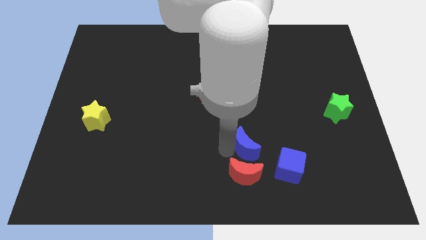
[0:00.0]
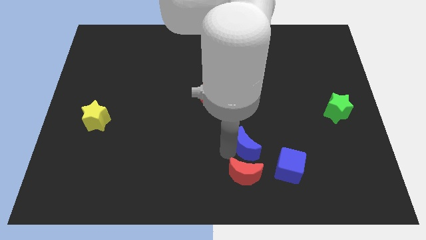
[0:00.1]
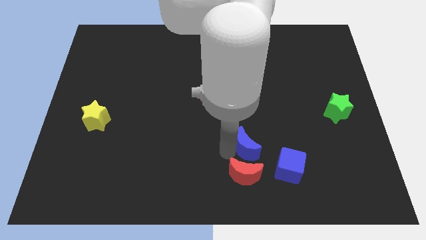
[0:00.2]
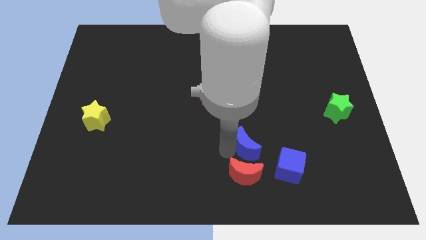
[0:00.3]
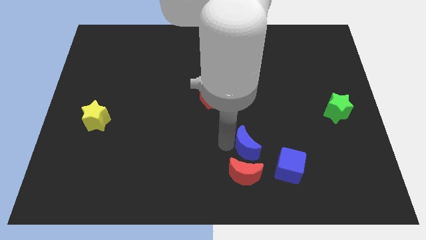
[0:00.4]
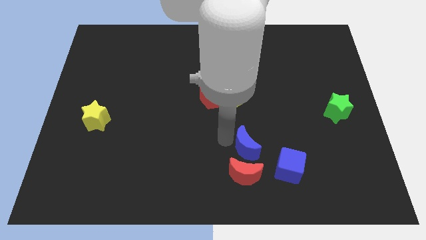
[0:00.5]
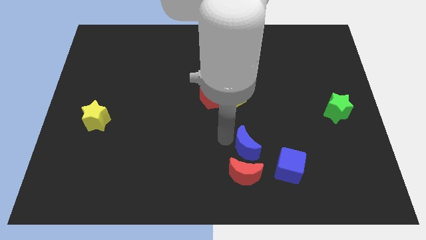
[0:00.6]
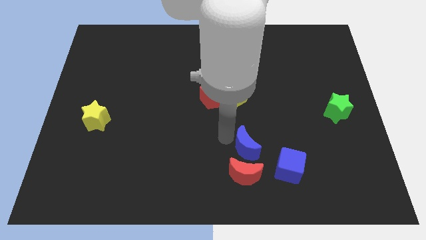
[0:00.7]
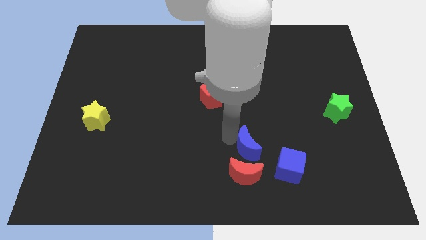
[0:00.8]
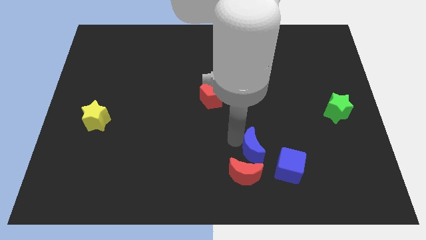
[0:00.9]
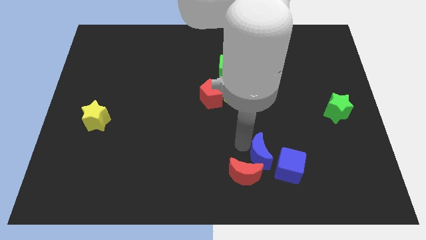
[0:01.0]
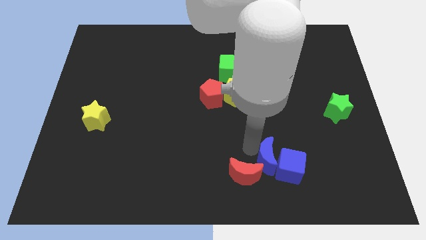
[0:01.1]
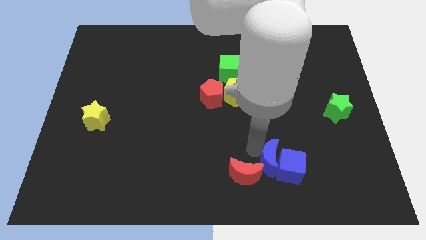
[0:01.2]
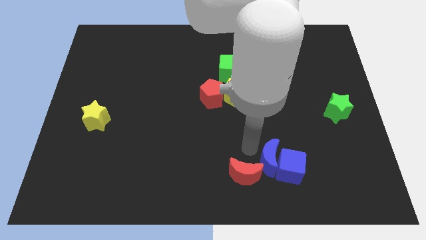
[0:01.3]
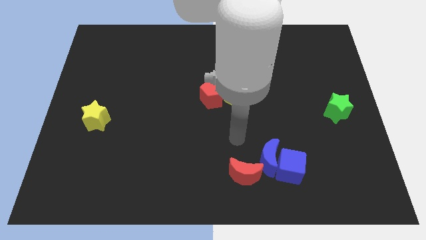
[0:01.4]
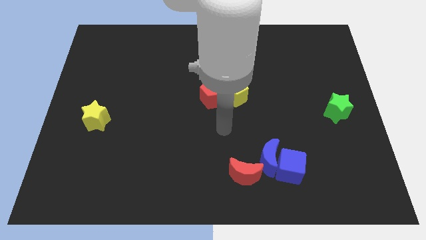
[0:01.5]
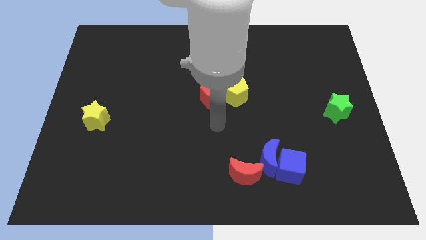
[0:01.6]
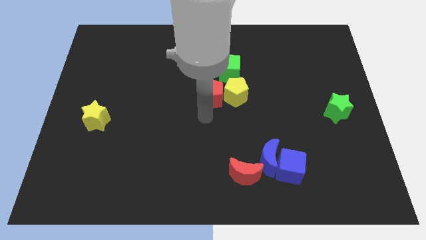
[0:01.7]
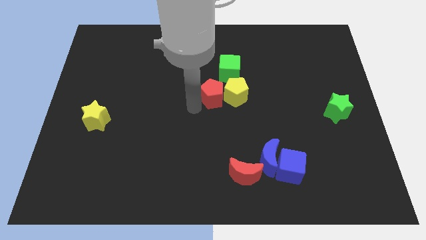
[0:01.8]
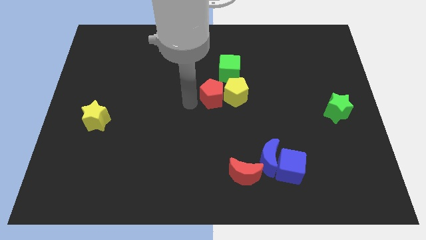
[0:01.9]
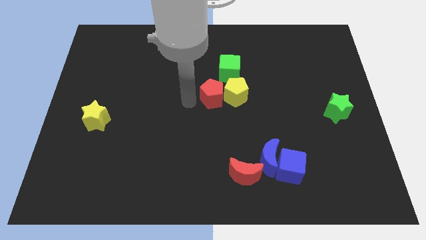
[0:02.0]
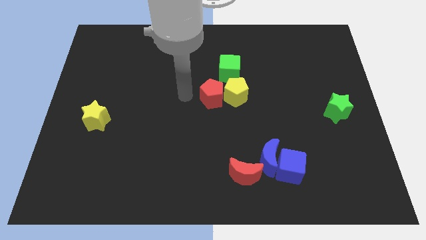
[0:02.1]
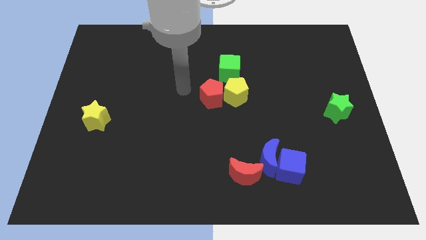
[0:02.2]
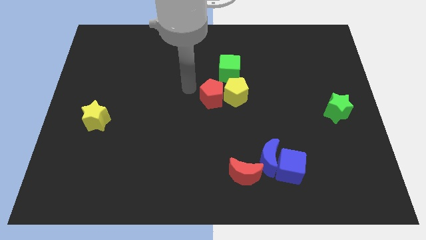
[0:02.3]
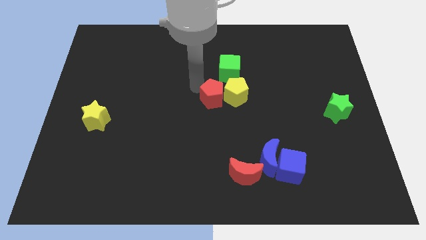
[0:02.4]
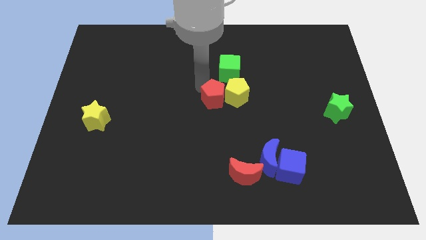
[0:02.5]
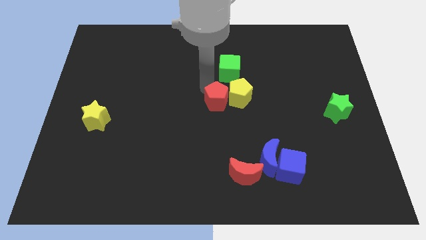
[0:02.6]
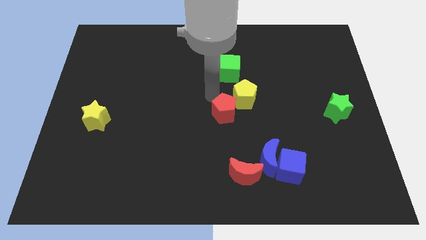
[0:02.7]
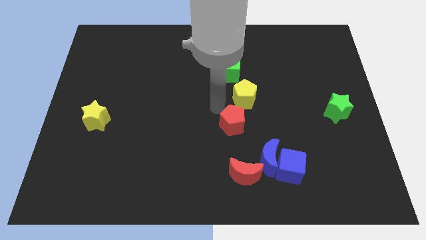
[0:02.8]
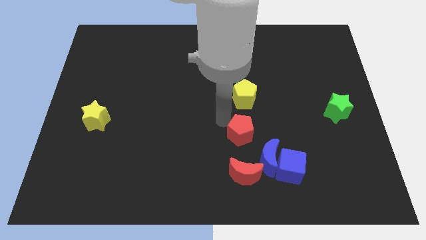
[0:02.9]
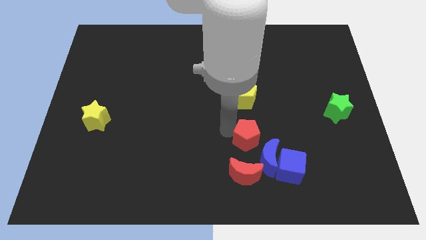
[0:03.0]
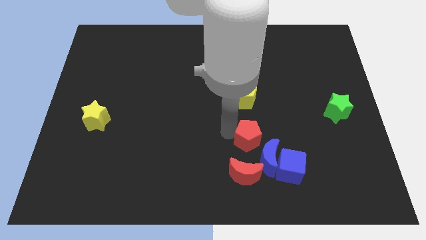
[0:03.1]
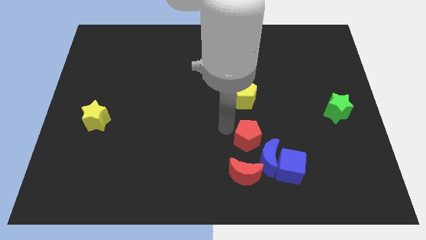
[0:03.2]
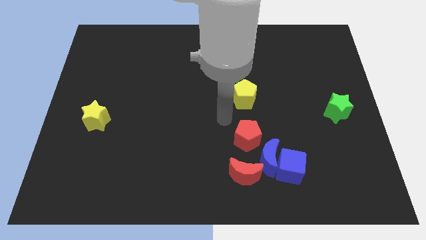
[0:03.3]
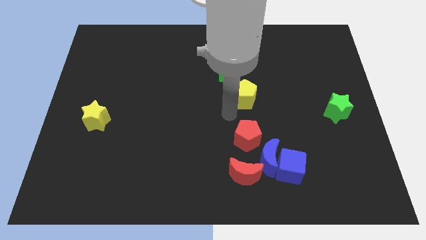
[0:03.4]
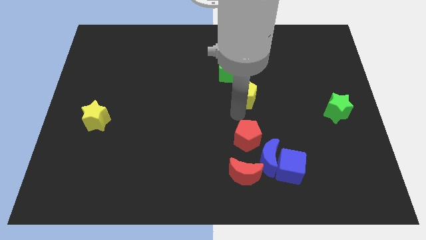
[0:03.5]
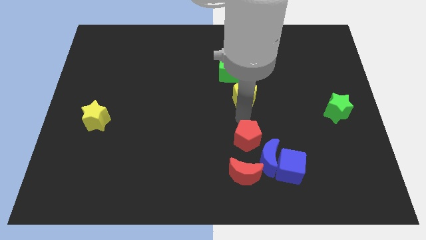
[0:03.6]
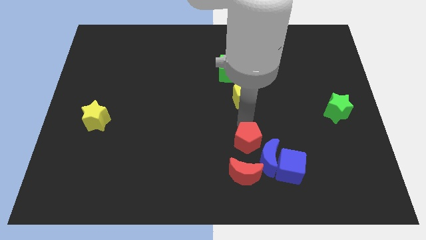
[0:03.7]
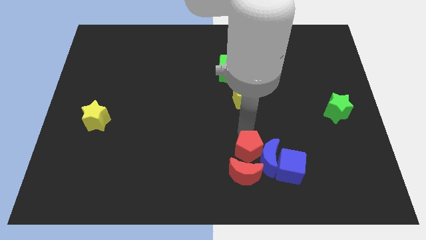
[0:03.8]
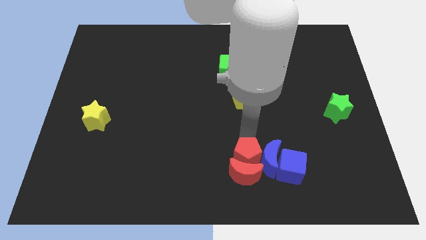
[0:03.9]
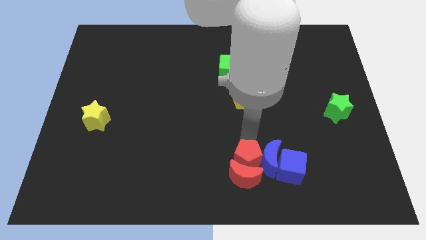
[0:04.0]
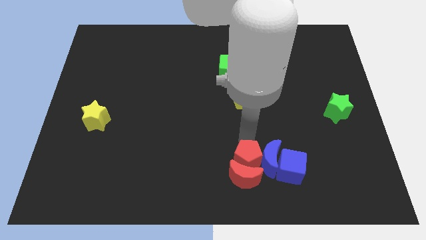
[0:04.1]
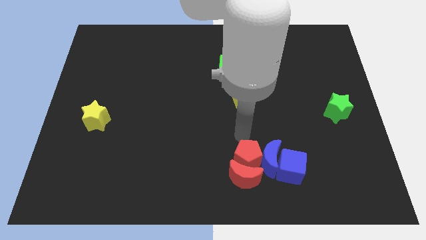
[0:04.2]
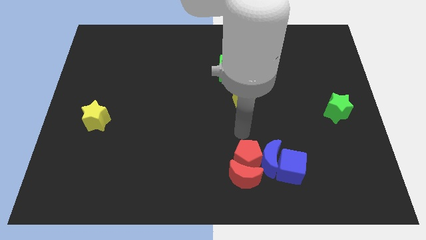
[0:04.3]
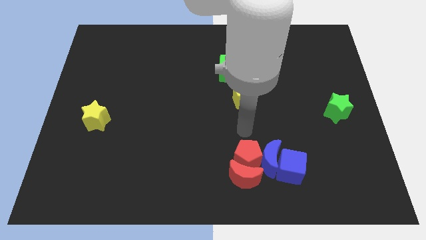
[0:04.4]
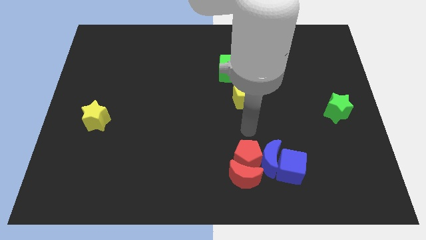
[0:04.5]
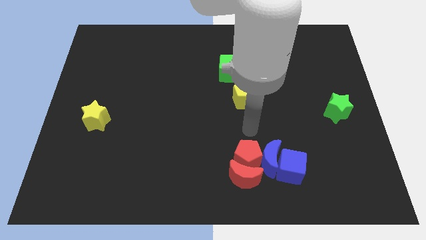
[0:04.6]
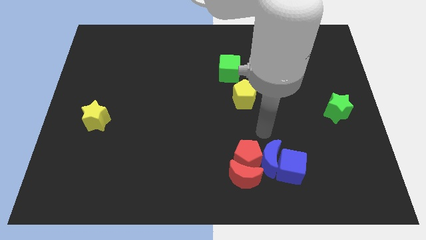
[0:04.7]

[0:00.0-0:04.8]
push the red pentagon into the red crescent and blue crescent

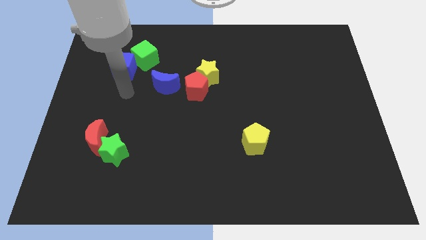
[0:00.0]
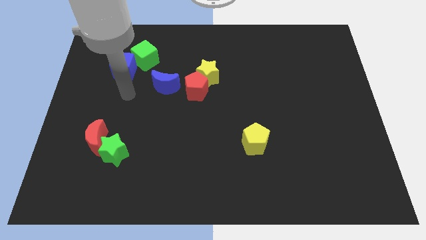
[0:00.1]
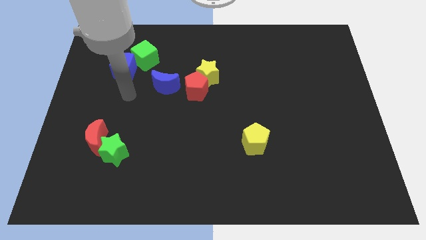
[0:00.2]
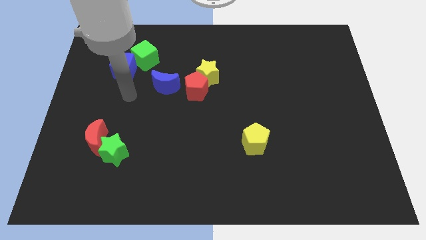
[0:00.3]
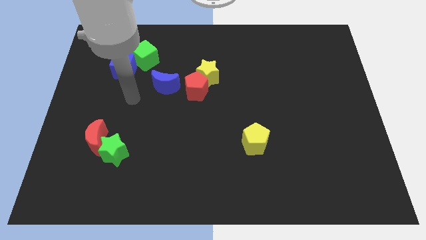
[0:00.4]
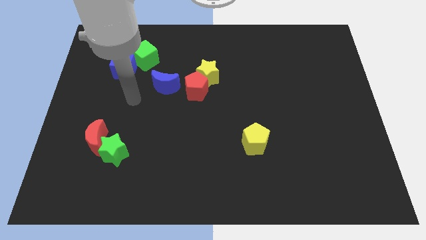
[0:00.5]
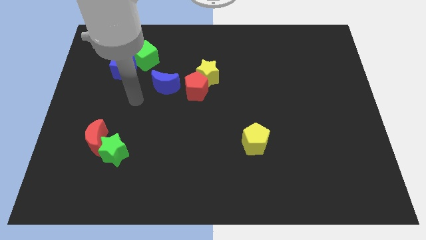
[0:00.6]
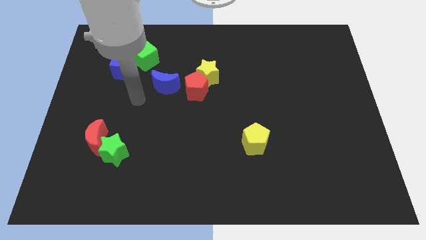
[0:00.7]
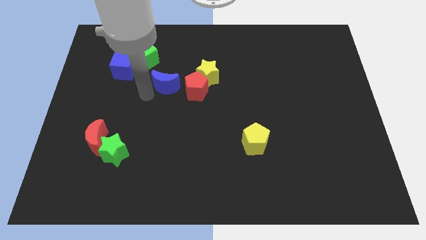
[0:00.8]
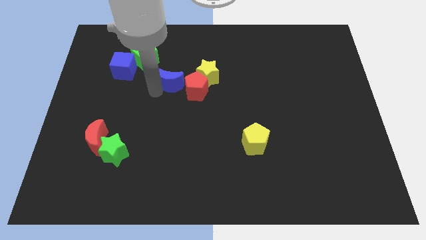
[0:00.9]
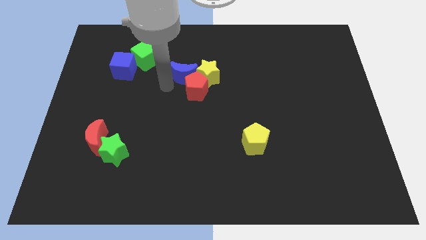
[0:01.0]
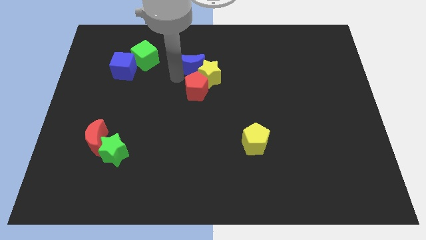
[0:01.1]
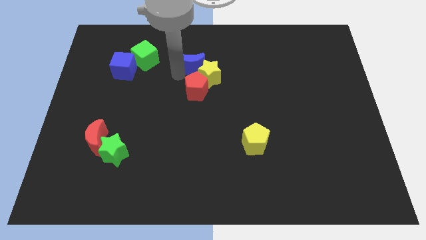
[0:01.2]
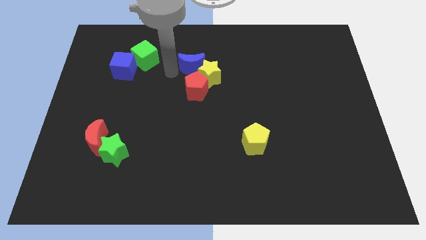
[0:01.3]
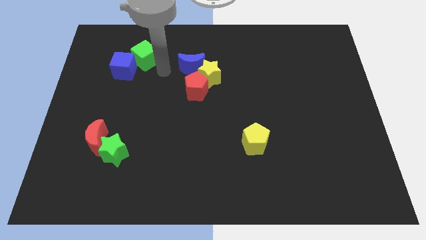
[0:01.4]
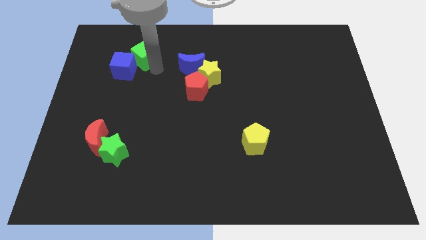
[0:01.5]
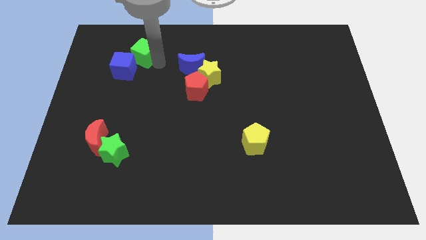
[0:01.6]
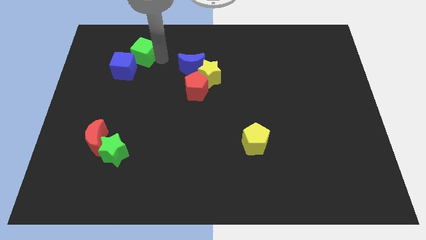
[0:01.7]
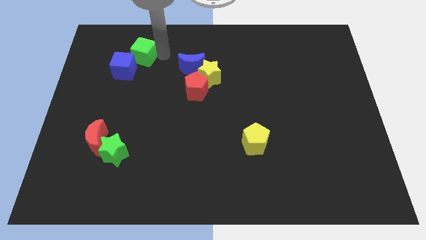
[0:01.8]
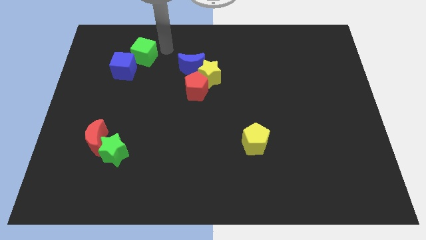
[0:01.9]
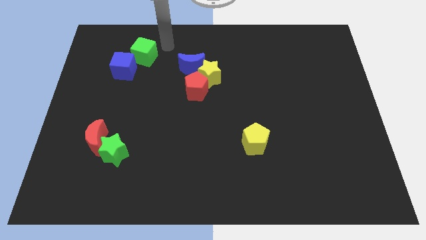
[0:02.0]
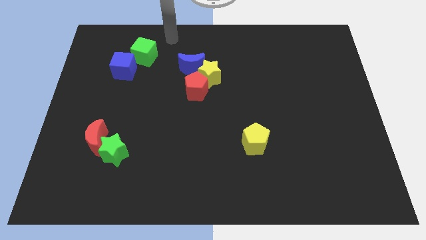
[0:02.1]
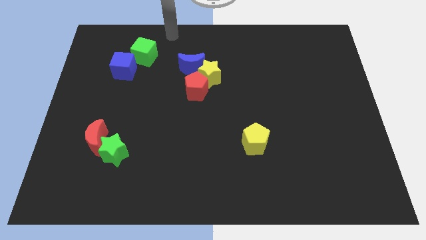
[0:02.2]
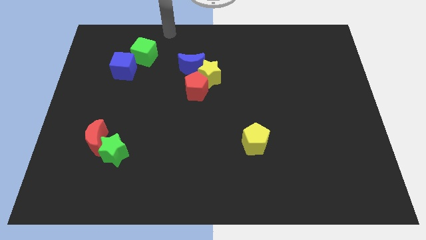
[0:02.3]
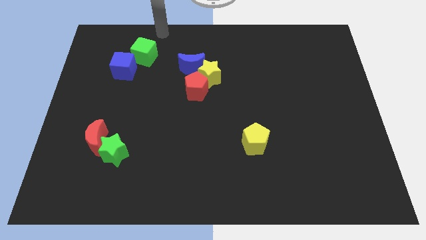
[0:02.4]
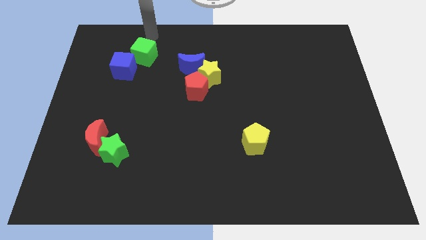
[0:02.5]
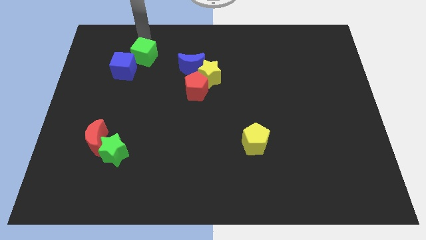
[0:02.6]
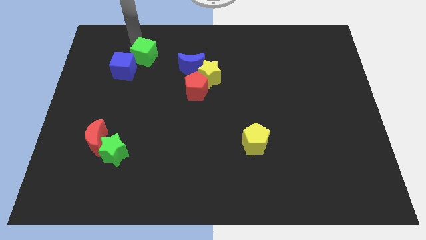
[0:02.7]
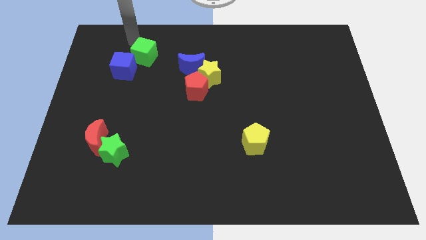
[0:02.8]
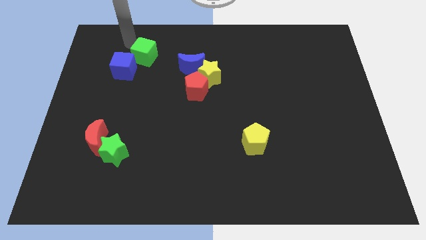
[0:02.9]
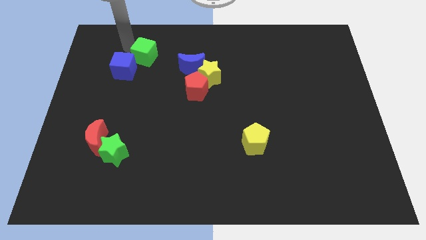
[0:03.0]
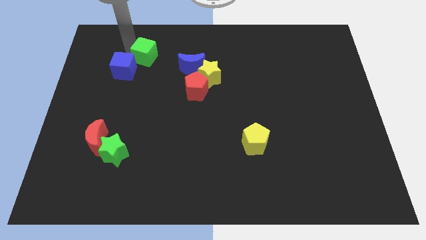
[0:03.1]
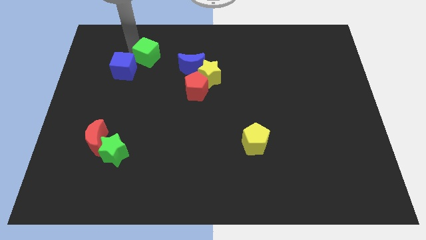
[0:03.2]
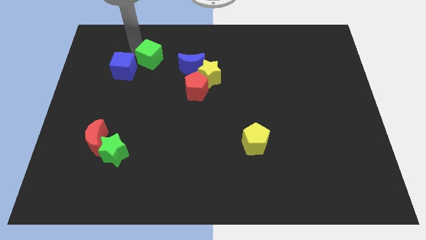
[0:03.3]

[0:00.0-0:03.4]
push the blue moon at the top of the board

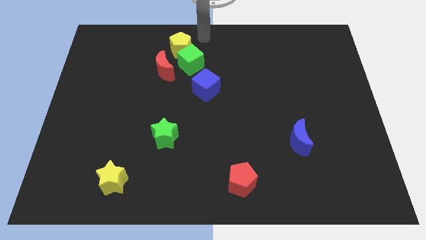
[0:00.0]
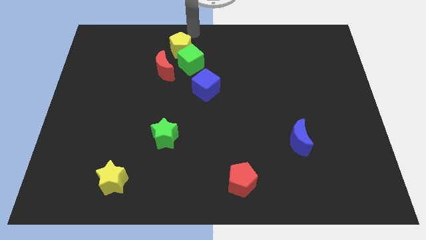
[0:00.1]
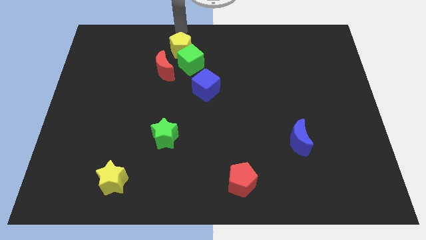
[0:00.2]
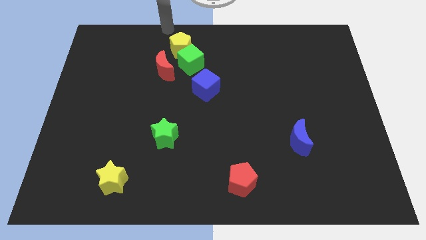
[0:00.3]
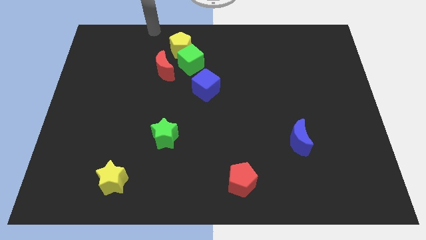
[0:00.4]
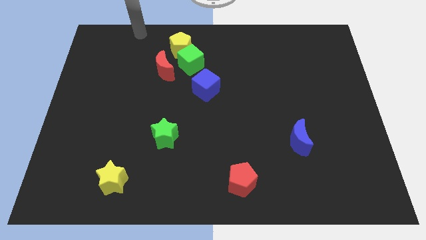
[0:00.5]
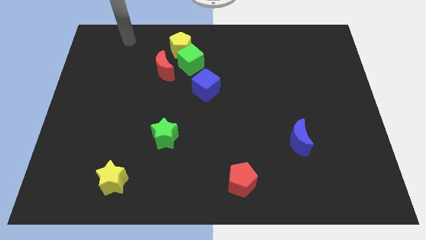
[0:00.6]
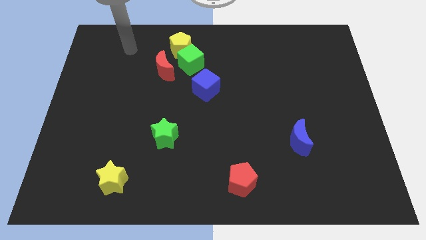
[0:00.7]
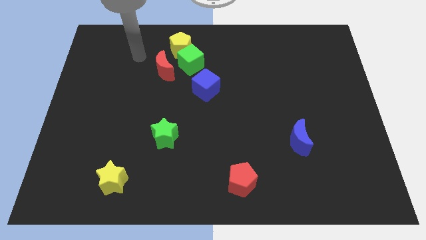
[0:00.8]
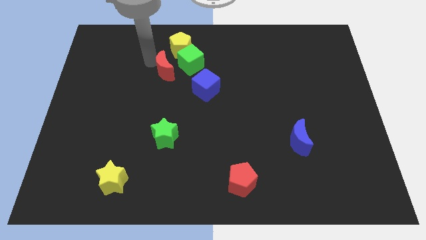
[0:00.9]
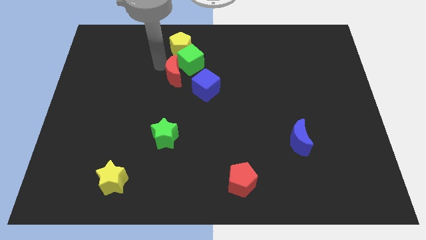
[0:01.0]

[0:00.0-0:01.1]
push the red crescent slightly down
